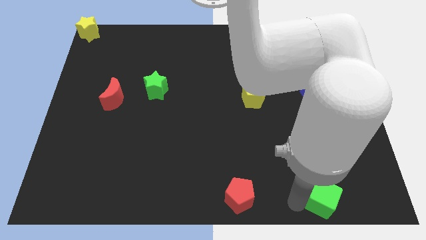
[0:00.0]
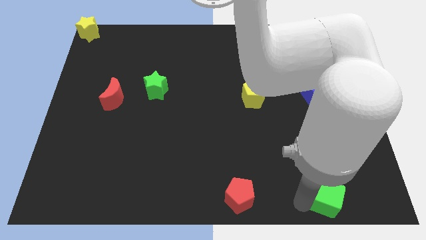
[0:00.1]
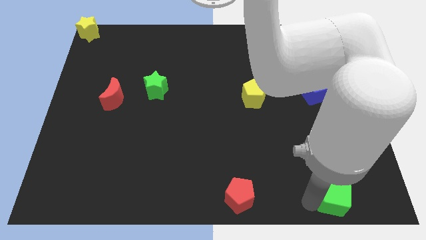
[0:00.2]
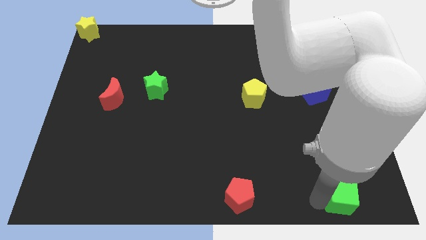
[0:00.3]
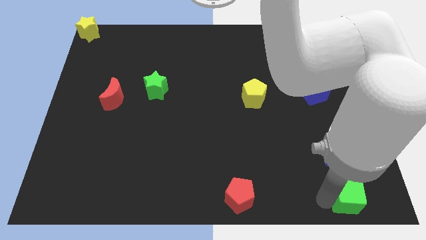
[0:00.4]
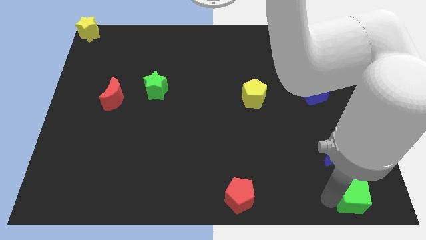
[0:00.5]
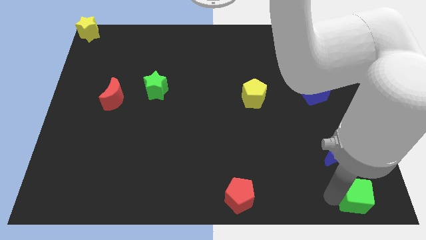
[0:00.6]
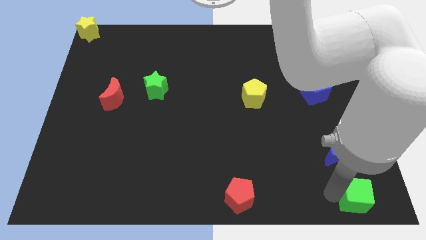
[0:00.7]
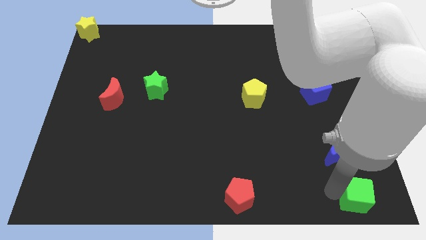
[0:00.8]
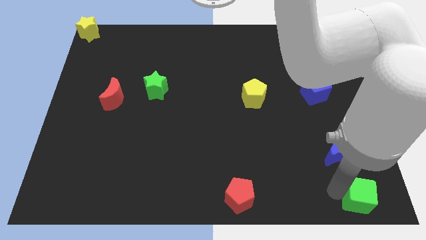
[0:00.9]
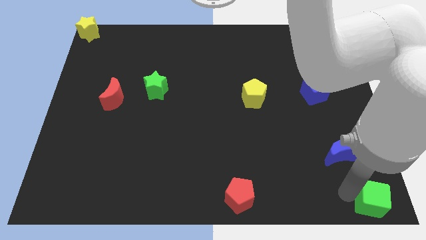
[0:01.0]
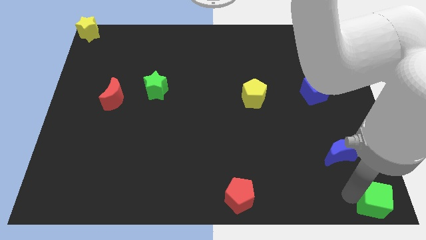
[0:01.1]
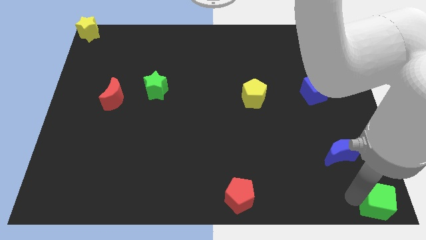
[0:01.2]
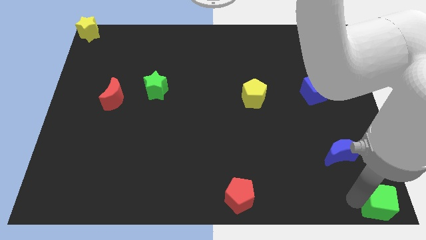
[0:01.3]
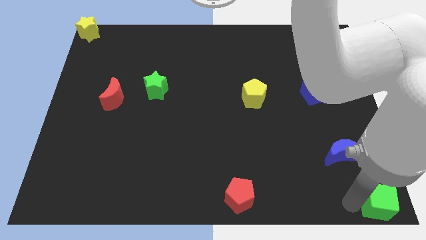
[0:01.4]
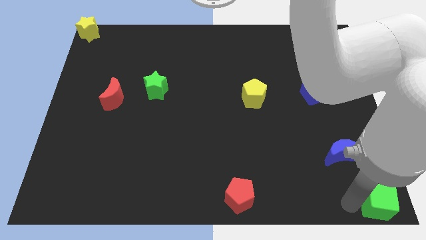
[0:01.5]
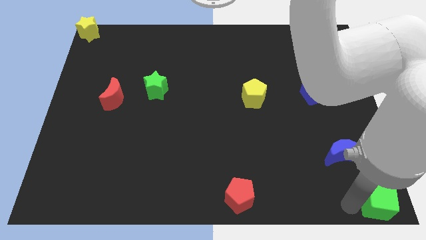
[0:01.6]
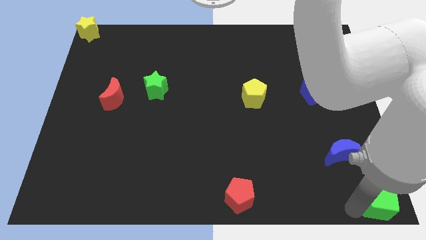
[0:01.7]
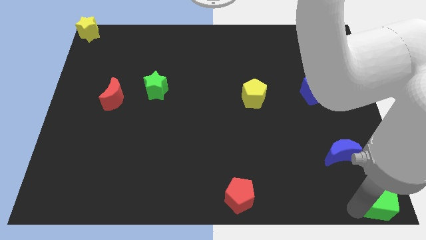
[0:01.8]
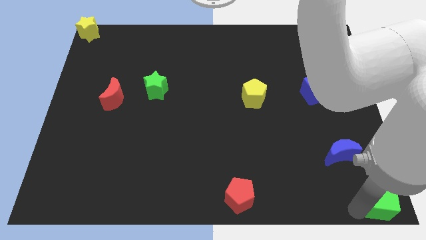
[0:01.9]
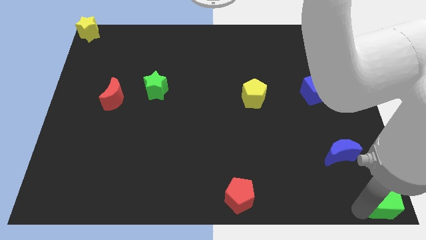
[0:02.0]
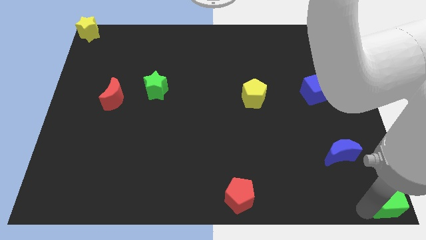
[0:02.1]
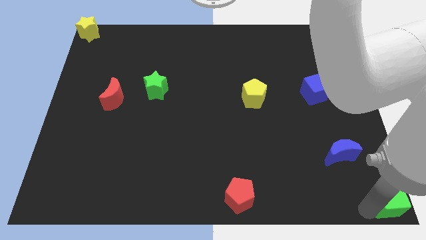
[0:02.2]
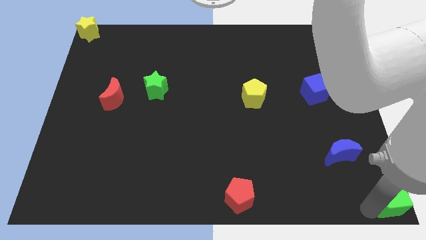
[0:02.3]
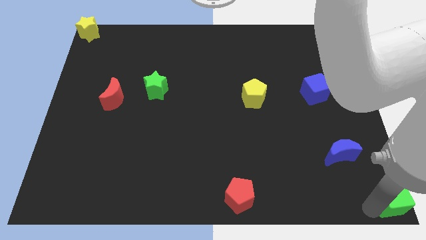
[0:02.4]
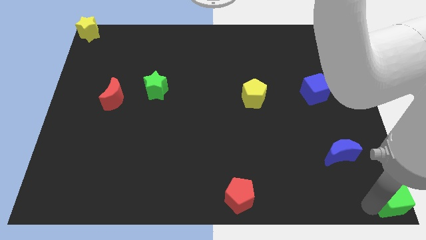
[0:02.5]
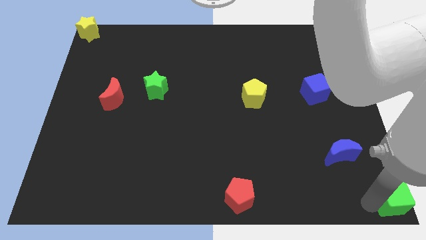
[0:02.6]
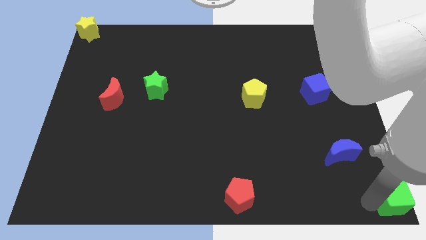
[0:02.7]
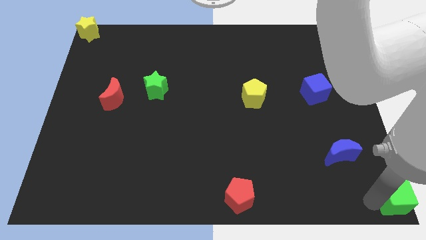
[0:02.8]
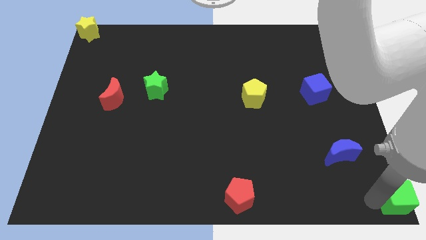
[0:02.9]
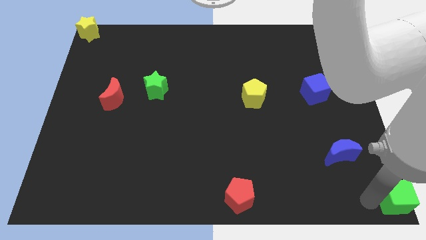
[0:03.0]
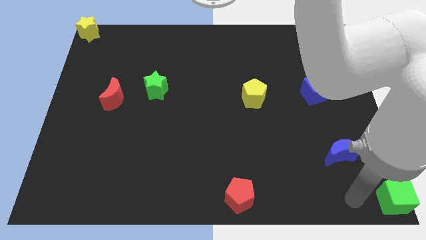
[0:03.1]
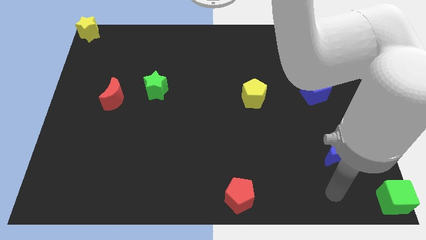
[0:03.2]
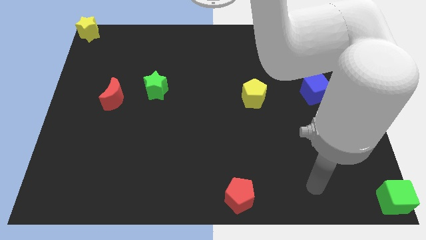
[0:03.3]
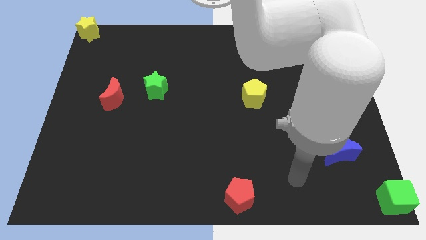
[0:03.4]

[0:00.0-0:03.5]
put the green cube at the bottom right corner of the board

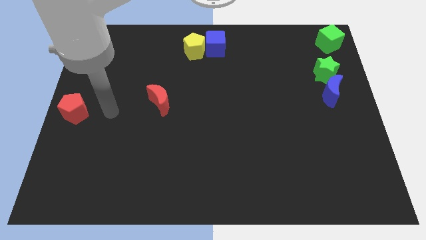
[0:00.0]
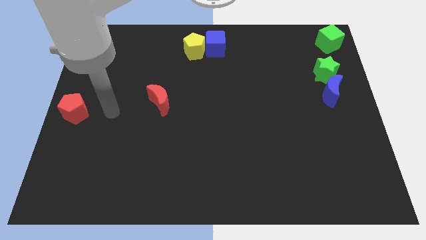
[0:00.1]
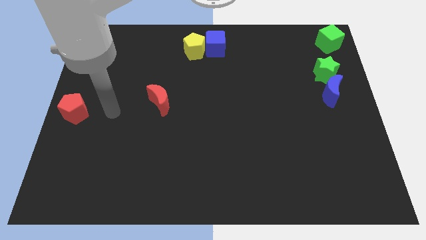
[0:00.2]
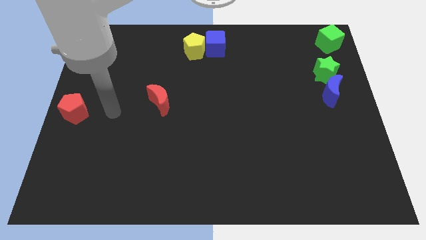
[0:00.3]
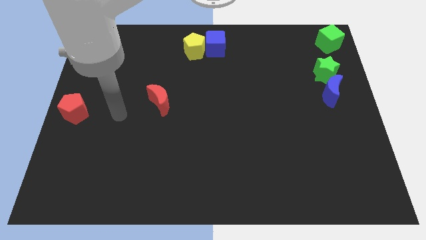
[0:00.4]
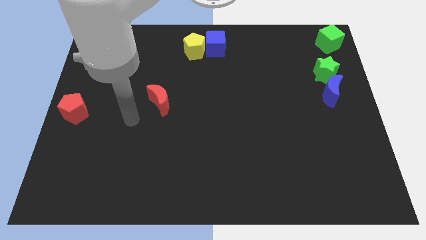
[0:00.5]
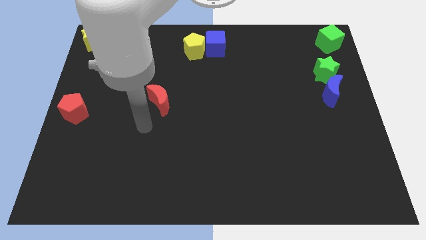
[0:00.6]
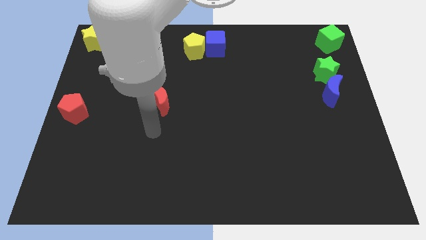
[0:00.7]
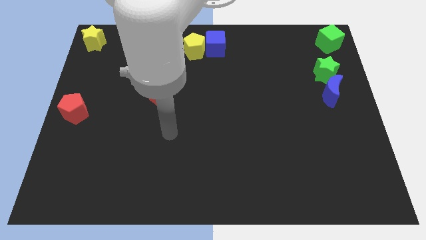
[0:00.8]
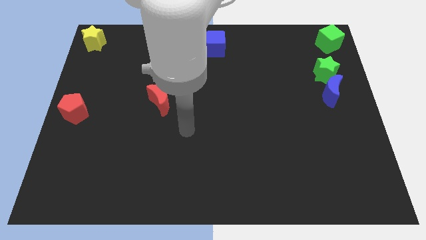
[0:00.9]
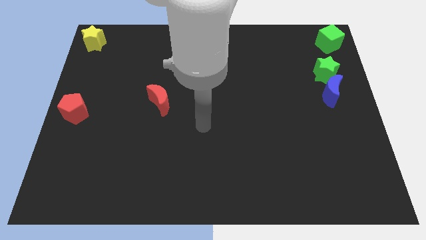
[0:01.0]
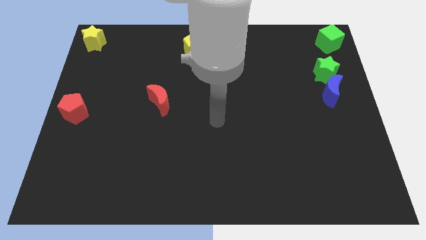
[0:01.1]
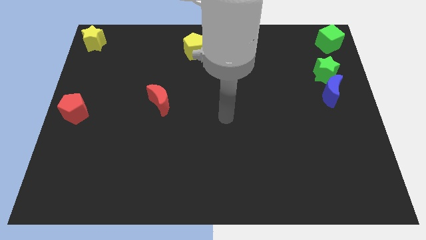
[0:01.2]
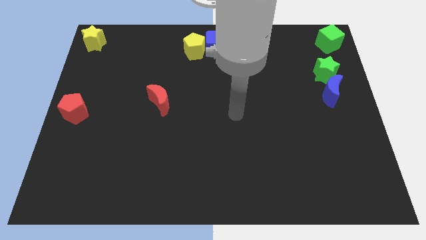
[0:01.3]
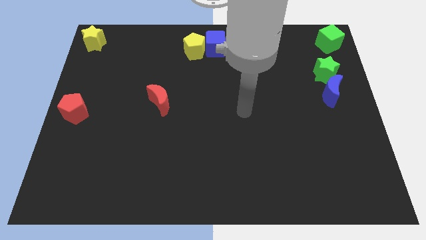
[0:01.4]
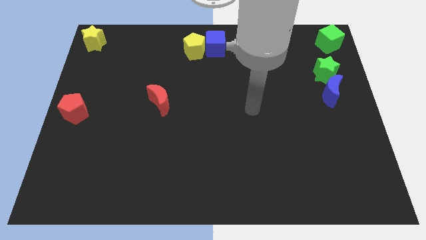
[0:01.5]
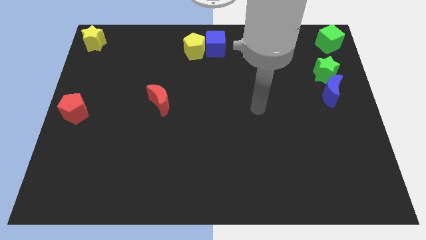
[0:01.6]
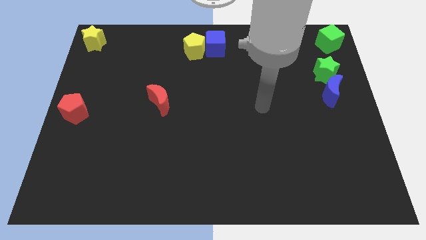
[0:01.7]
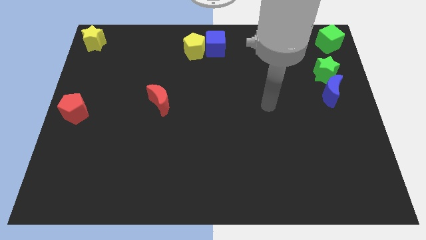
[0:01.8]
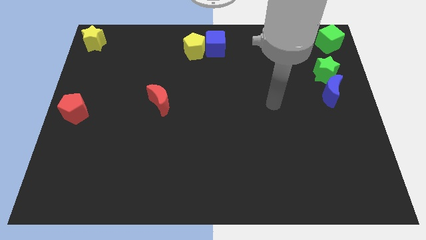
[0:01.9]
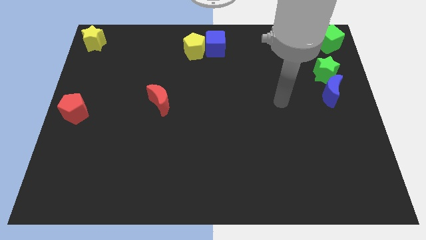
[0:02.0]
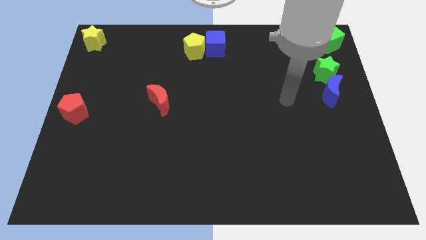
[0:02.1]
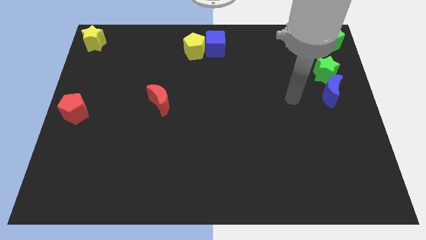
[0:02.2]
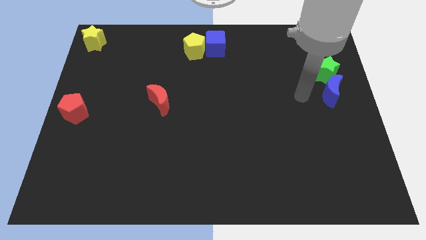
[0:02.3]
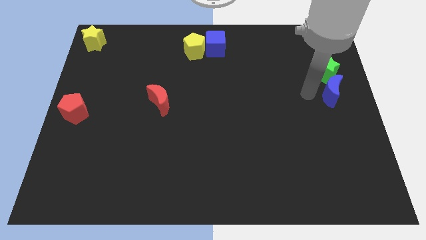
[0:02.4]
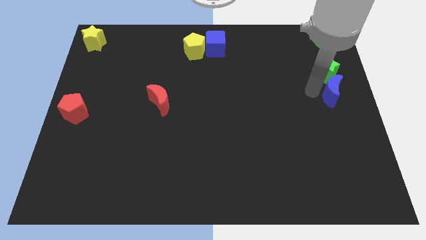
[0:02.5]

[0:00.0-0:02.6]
point the arm to the left of the blue moon

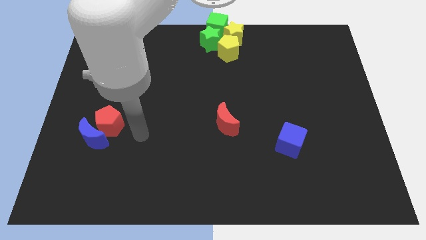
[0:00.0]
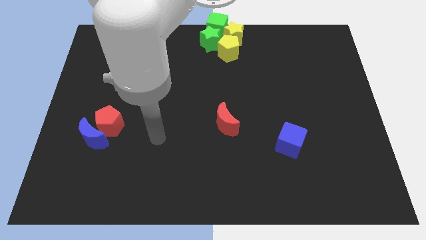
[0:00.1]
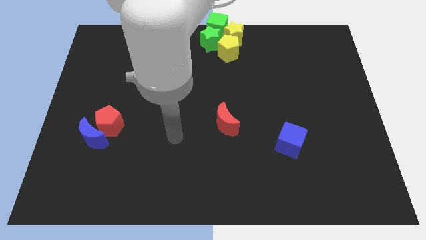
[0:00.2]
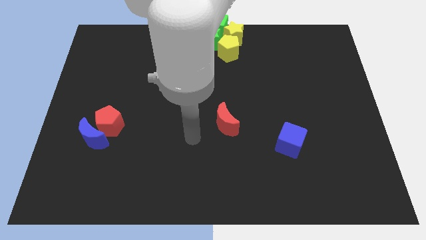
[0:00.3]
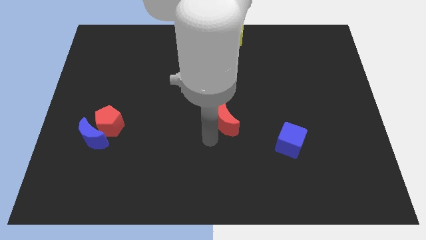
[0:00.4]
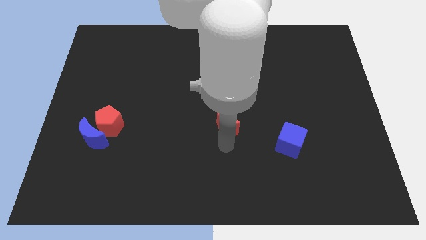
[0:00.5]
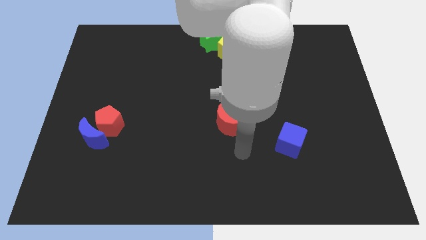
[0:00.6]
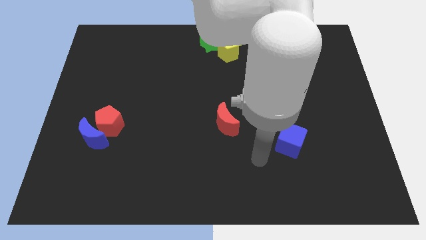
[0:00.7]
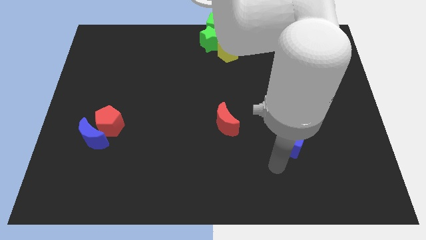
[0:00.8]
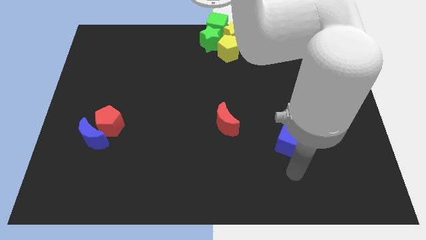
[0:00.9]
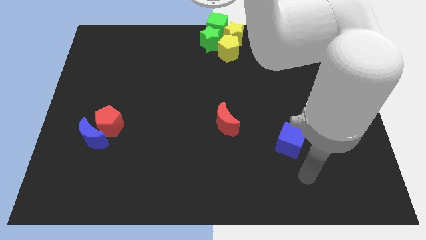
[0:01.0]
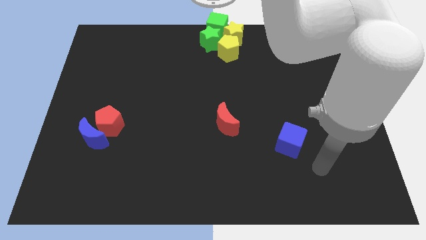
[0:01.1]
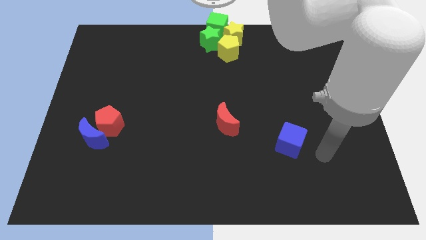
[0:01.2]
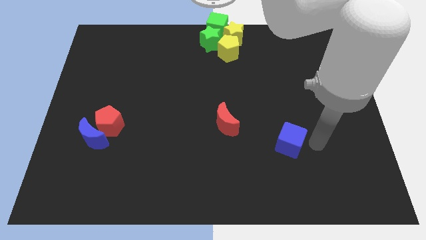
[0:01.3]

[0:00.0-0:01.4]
move your arm near to the blue cube

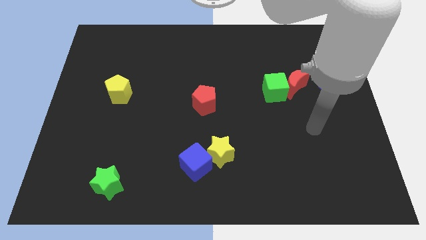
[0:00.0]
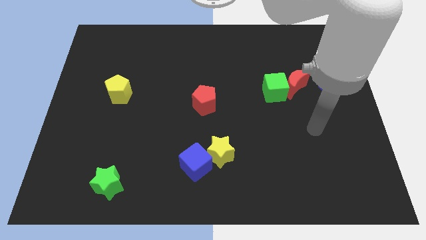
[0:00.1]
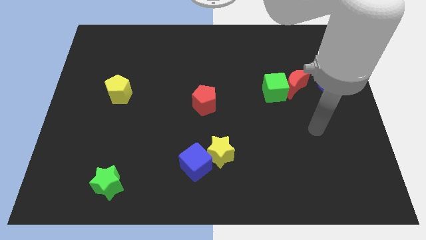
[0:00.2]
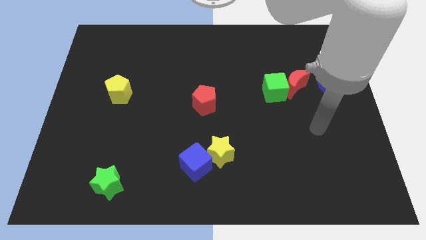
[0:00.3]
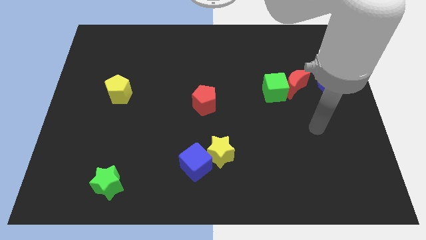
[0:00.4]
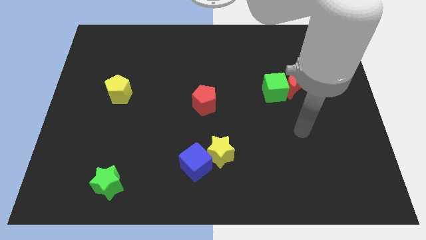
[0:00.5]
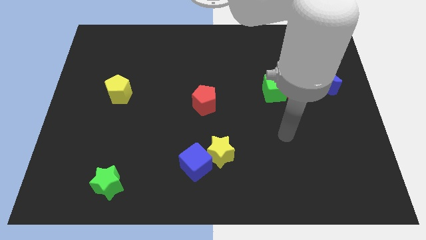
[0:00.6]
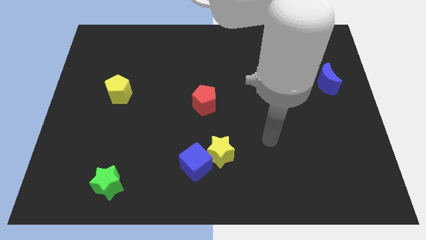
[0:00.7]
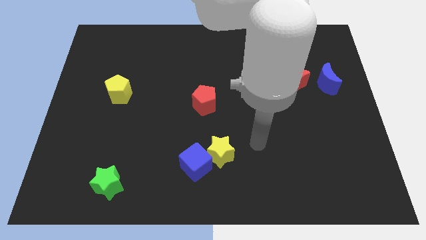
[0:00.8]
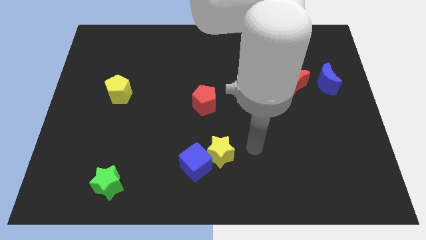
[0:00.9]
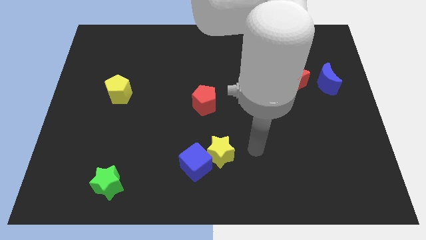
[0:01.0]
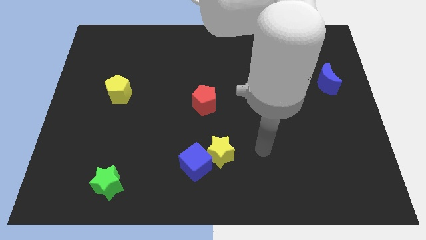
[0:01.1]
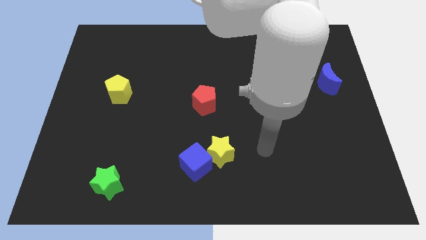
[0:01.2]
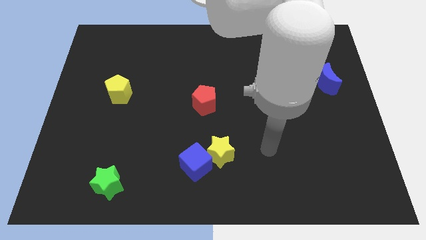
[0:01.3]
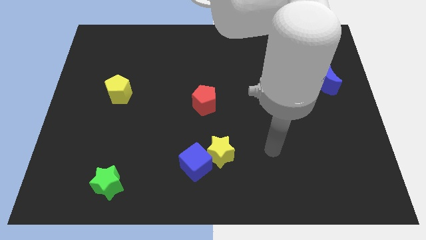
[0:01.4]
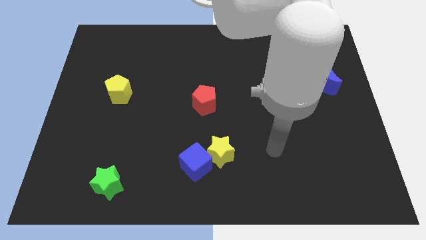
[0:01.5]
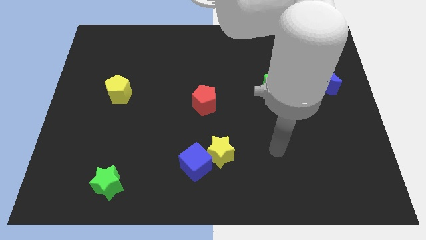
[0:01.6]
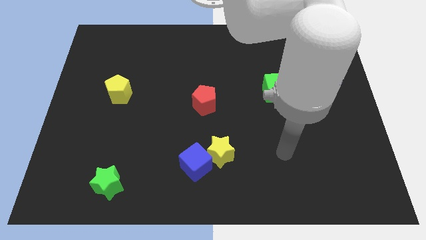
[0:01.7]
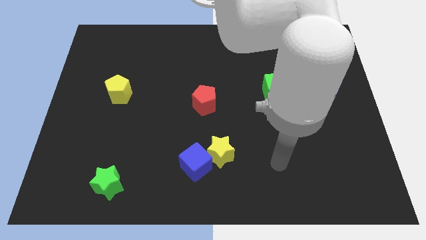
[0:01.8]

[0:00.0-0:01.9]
place your arm below the green cube
